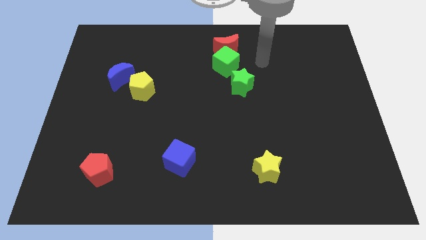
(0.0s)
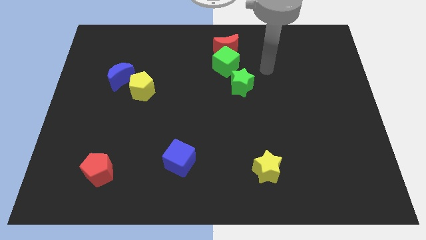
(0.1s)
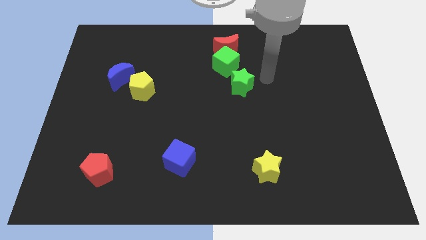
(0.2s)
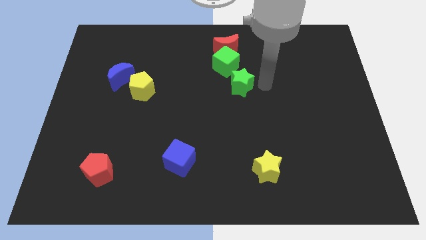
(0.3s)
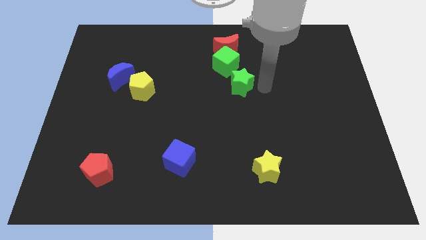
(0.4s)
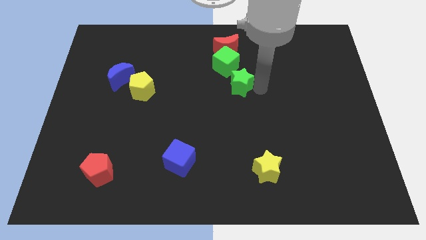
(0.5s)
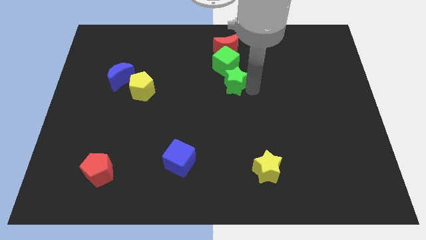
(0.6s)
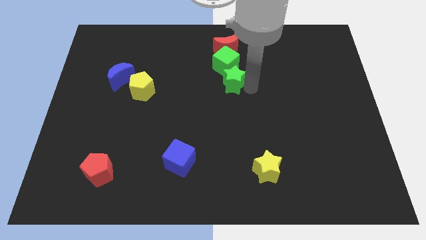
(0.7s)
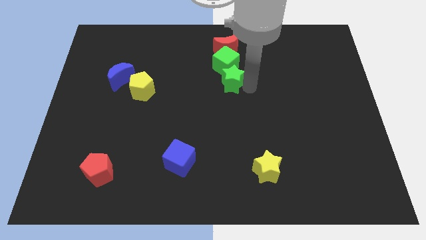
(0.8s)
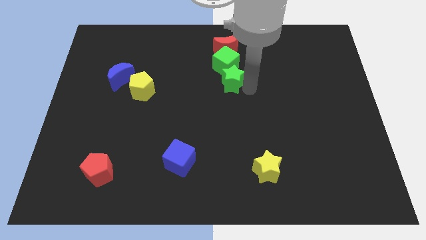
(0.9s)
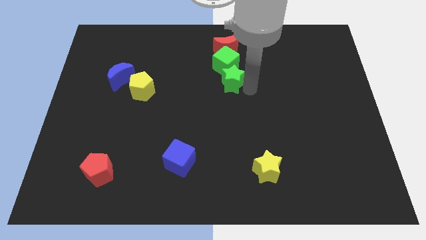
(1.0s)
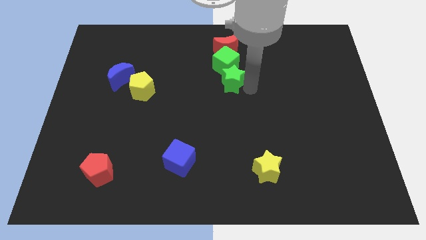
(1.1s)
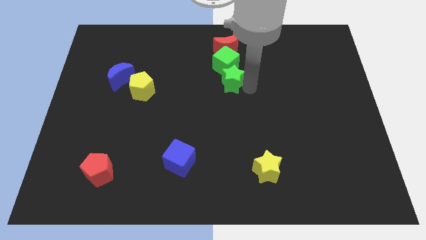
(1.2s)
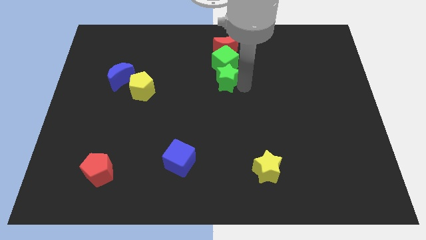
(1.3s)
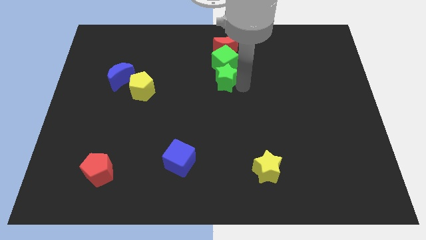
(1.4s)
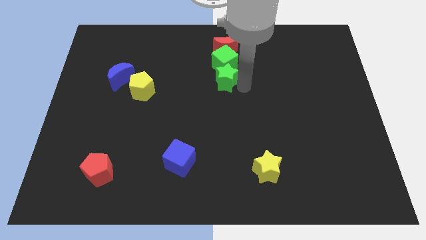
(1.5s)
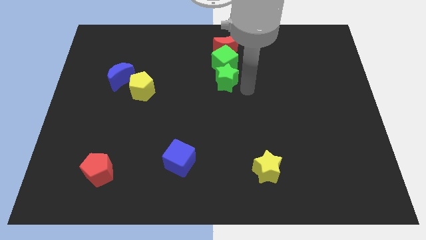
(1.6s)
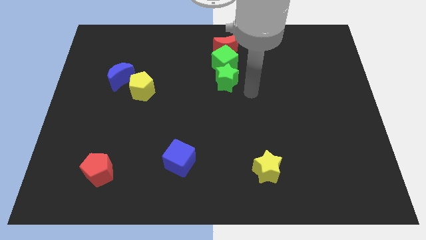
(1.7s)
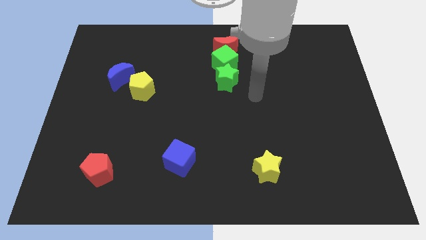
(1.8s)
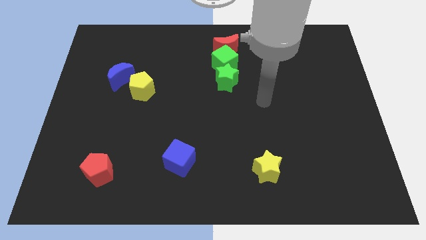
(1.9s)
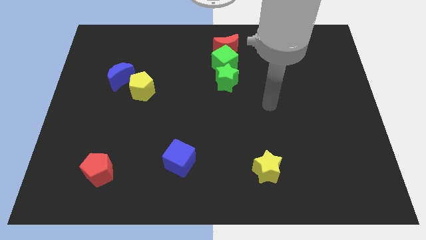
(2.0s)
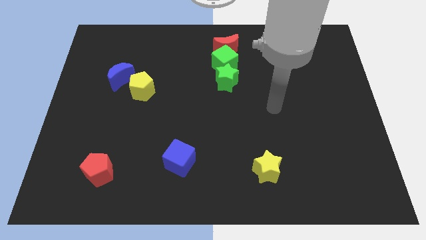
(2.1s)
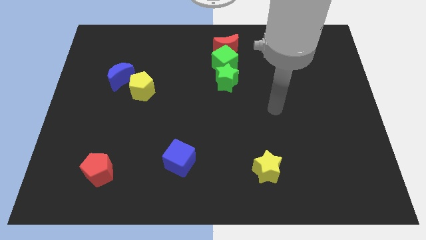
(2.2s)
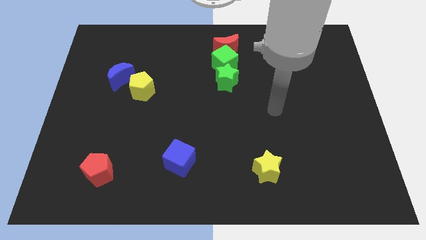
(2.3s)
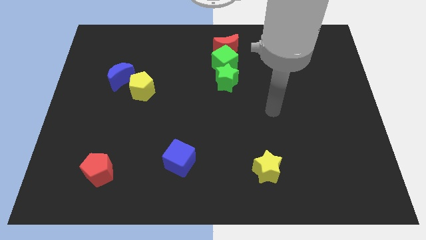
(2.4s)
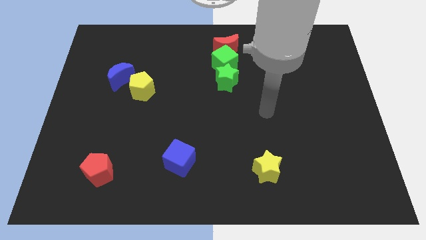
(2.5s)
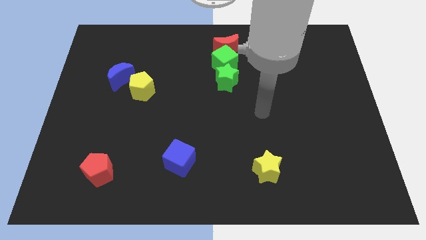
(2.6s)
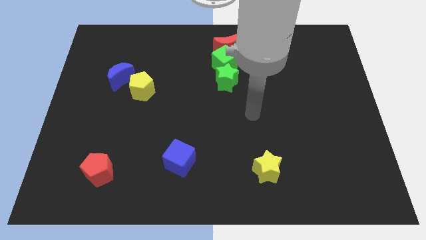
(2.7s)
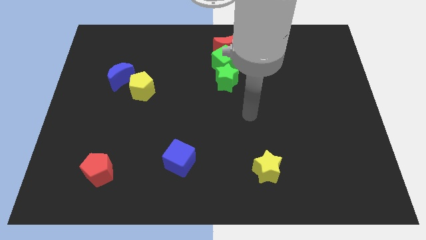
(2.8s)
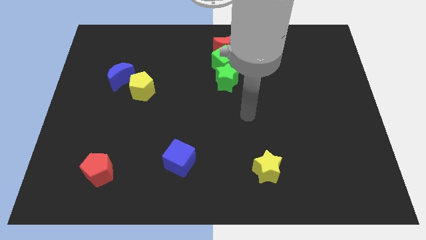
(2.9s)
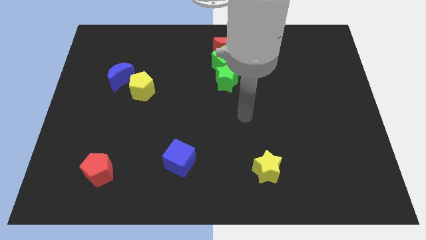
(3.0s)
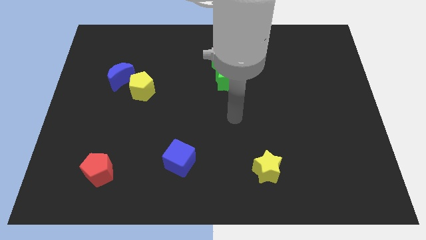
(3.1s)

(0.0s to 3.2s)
move the green star to the bottom of the green cube

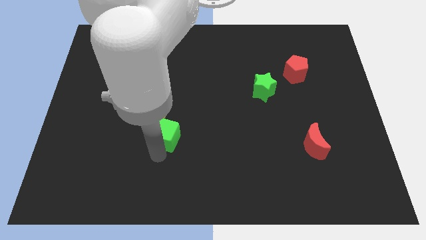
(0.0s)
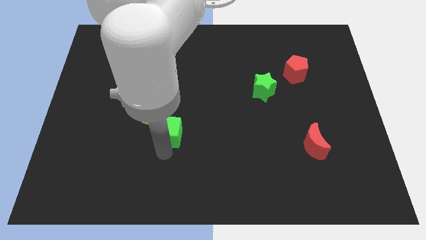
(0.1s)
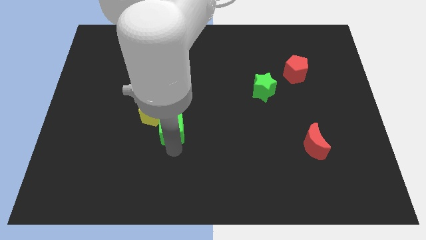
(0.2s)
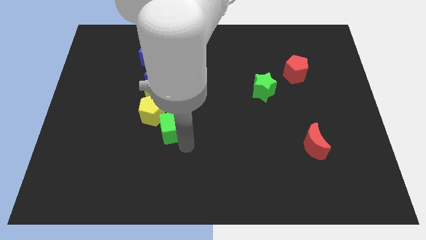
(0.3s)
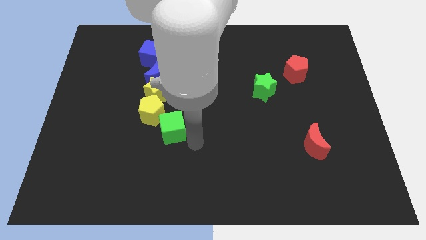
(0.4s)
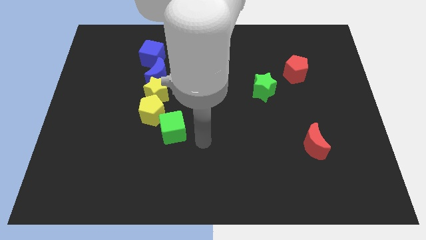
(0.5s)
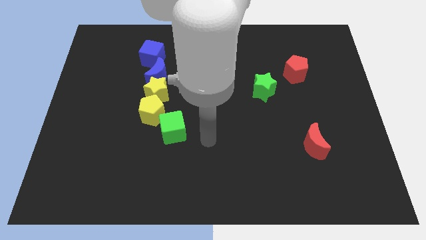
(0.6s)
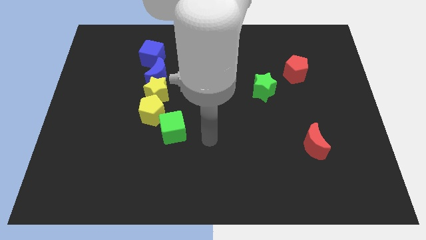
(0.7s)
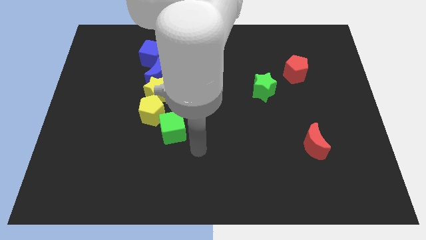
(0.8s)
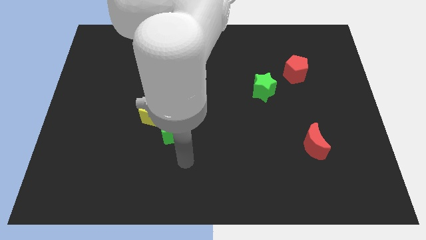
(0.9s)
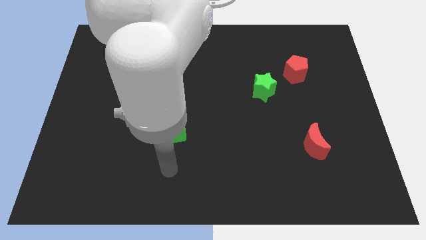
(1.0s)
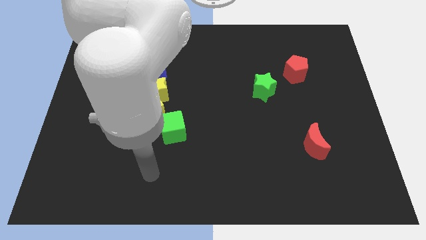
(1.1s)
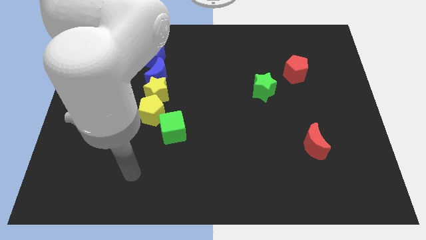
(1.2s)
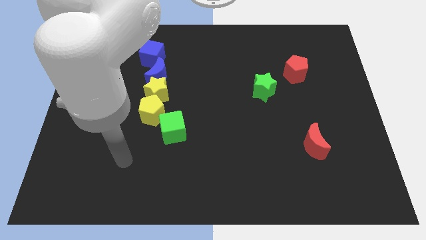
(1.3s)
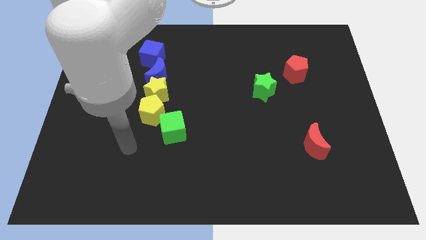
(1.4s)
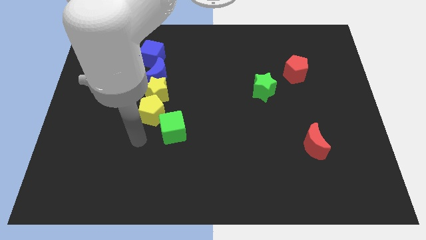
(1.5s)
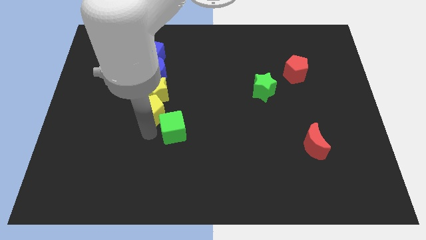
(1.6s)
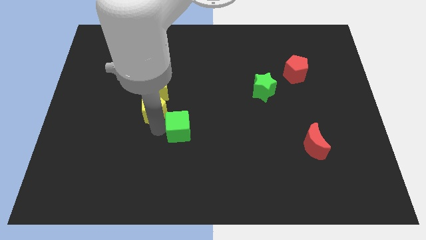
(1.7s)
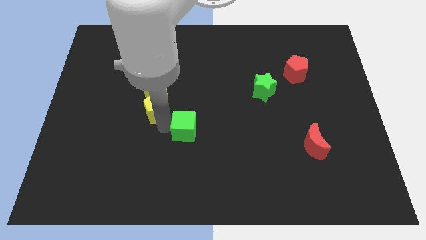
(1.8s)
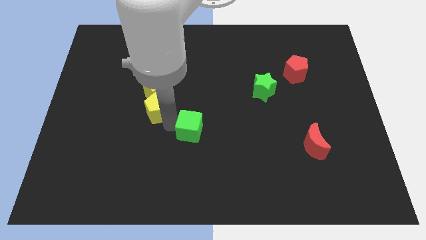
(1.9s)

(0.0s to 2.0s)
move green cube into the yellow pentagon

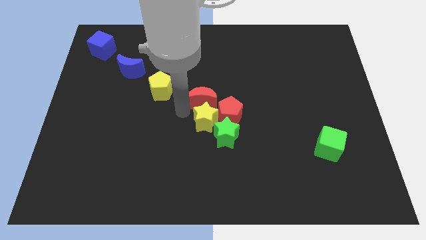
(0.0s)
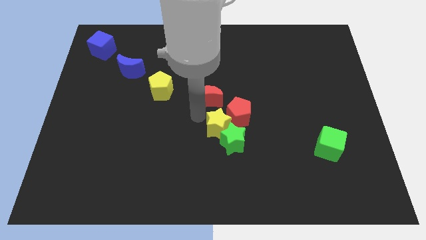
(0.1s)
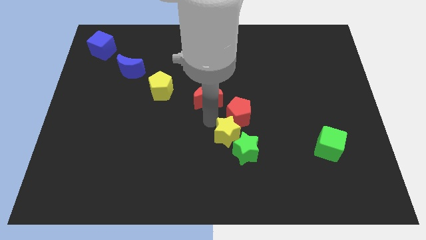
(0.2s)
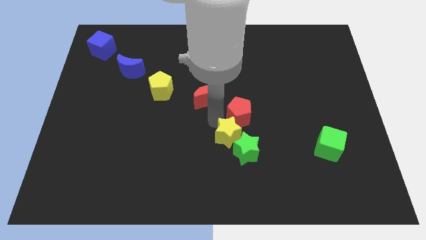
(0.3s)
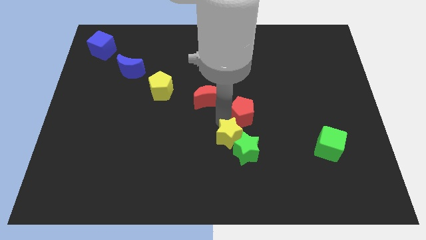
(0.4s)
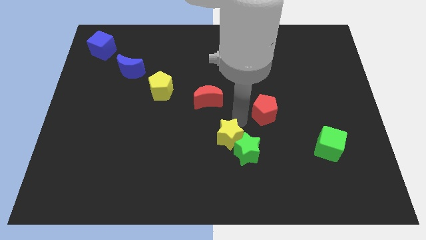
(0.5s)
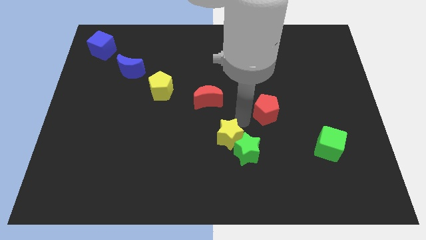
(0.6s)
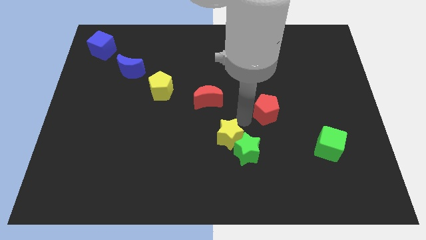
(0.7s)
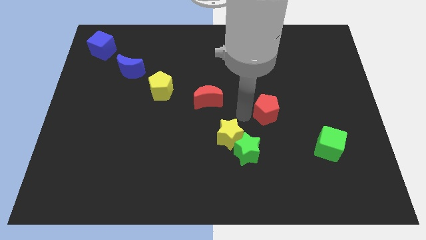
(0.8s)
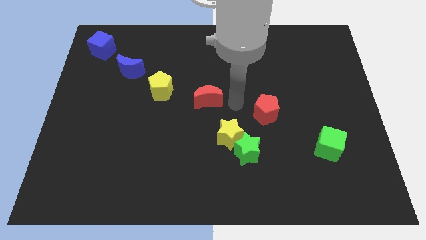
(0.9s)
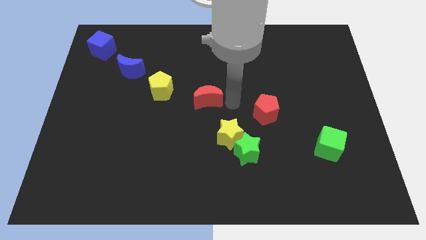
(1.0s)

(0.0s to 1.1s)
separate the red pentagon from yellow star

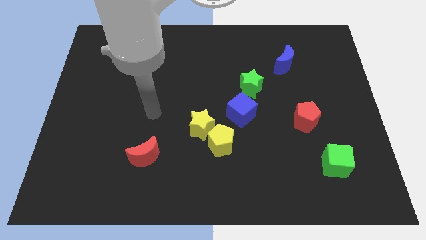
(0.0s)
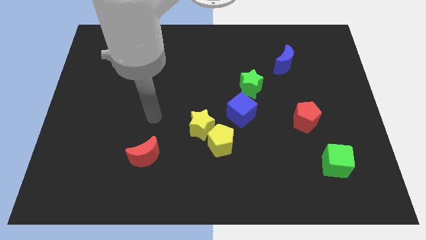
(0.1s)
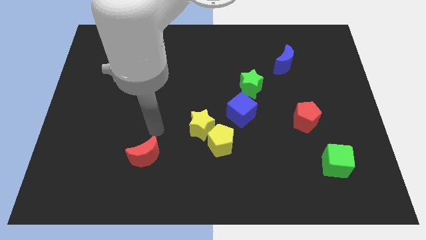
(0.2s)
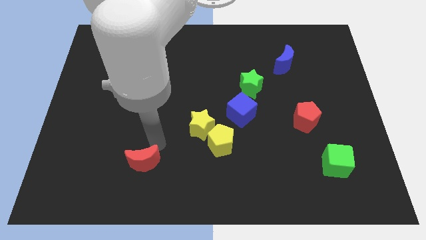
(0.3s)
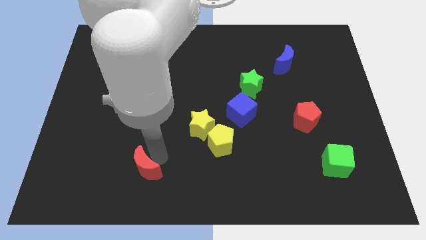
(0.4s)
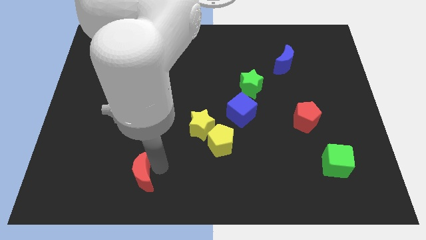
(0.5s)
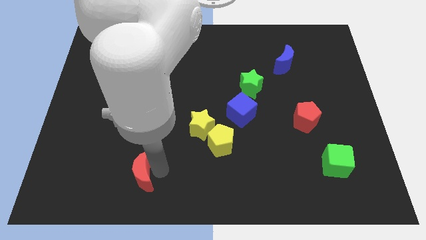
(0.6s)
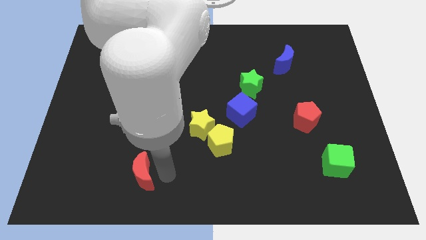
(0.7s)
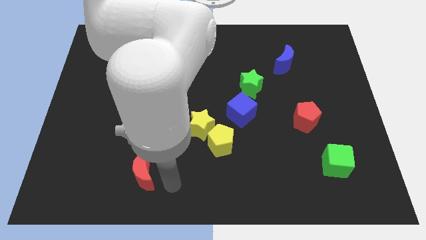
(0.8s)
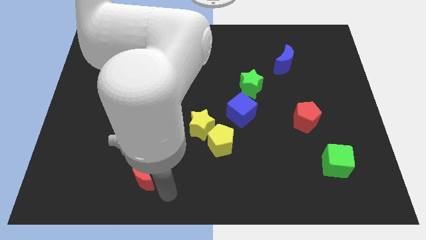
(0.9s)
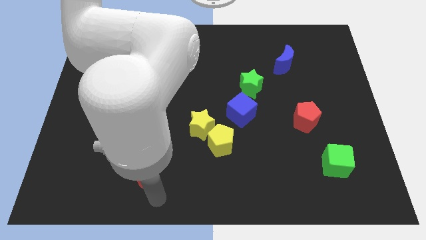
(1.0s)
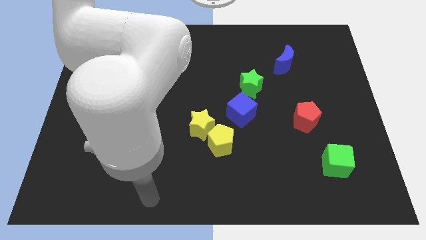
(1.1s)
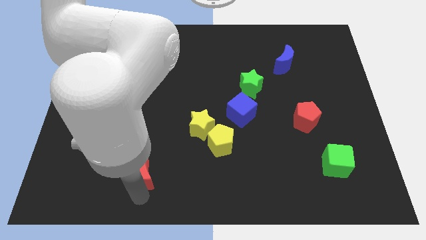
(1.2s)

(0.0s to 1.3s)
push the red crescent slightly to the bottom

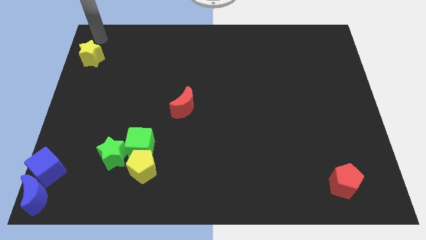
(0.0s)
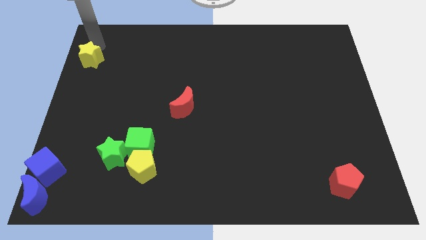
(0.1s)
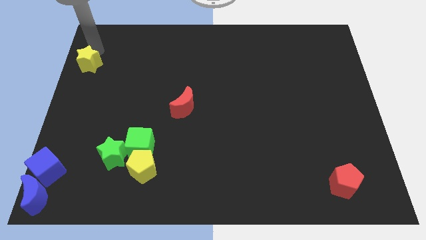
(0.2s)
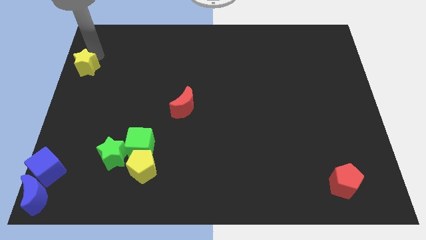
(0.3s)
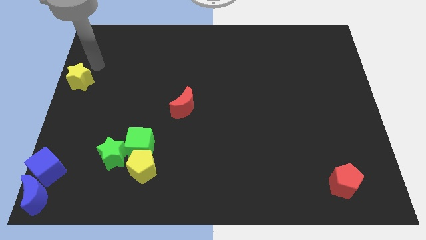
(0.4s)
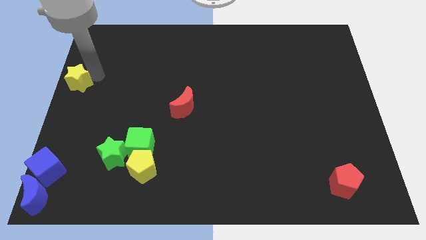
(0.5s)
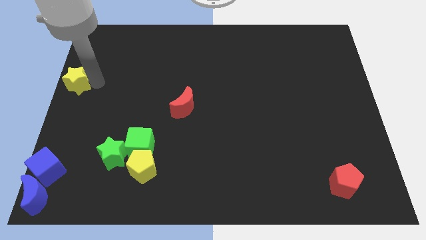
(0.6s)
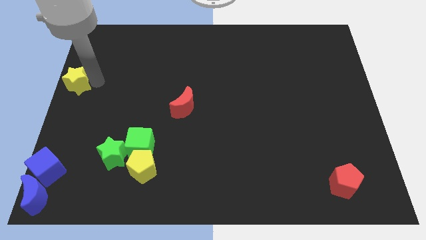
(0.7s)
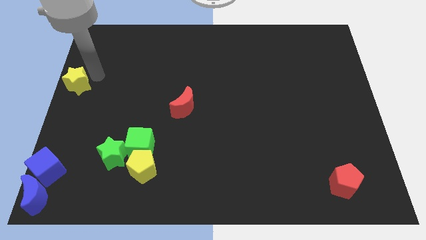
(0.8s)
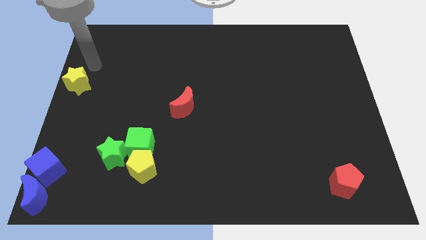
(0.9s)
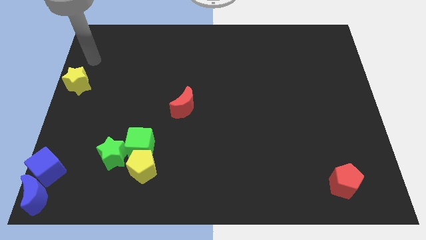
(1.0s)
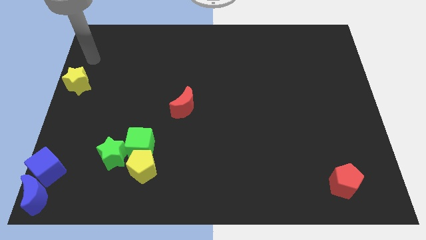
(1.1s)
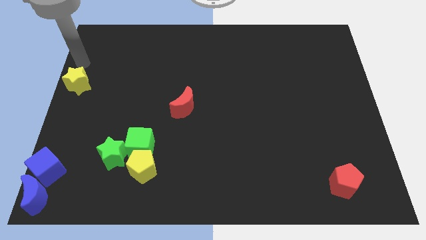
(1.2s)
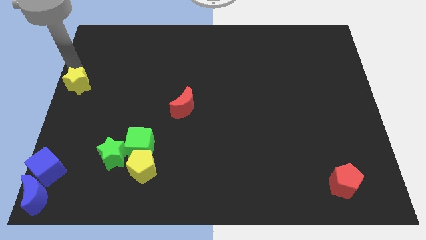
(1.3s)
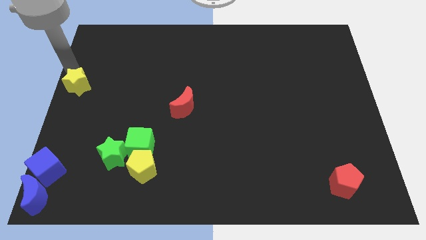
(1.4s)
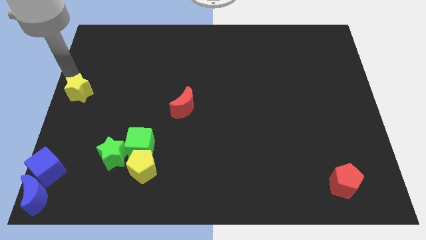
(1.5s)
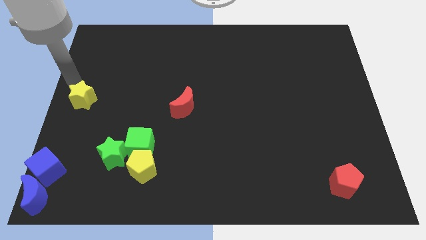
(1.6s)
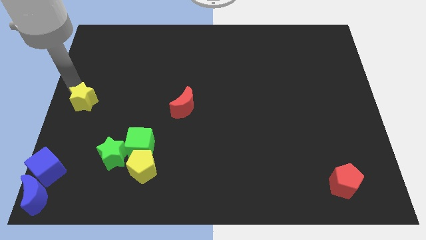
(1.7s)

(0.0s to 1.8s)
move the yellow star to the left of the red crescent
